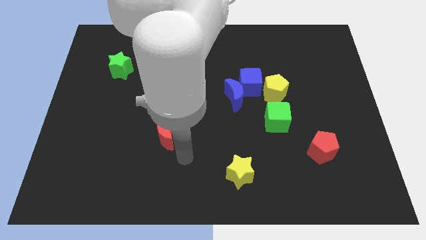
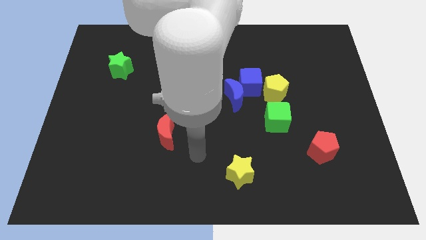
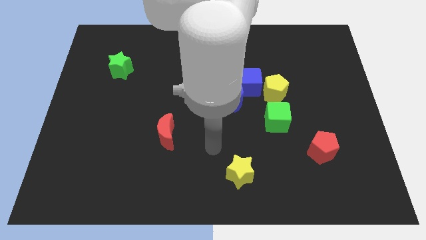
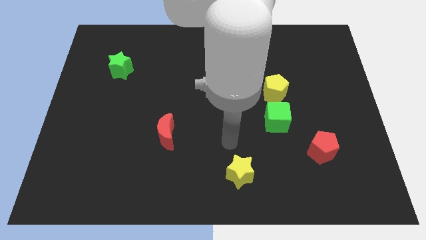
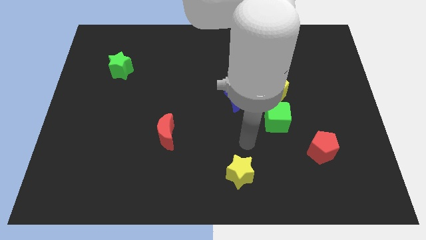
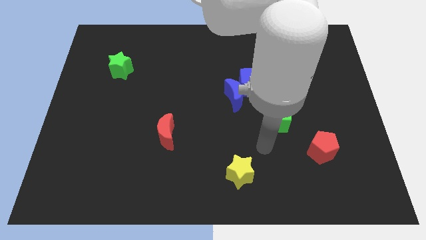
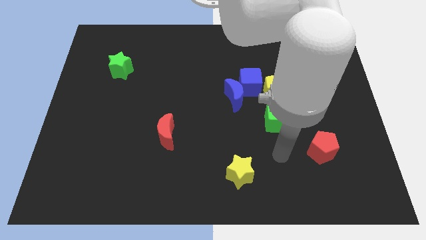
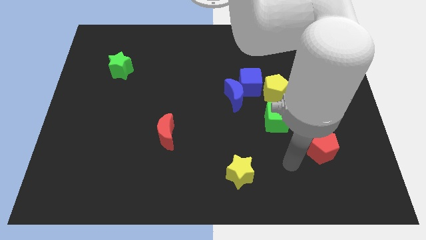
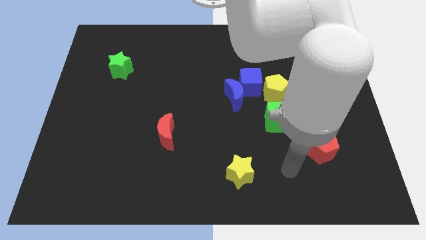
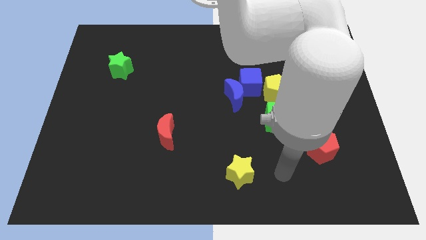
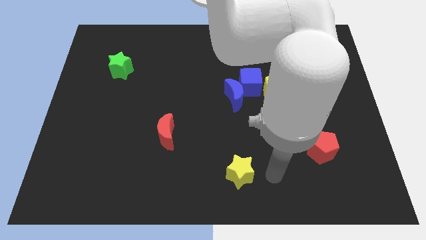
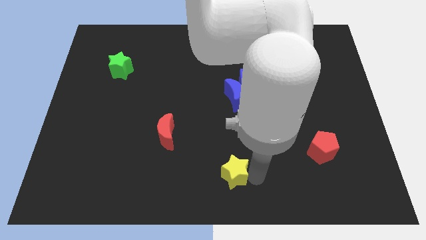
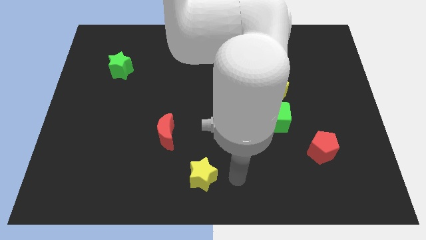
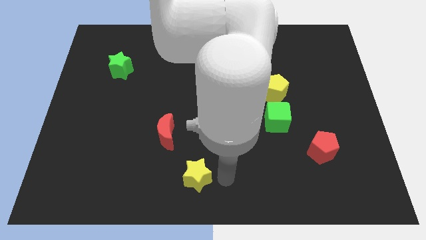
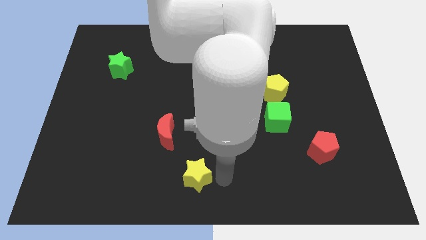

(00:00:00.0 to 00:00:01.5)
move the yellow star to bottom center

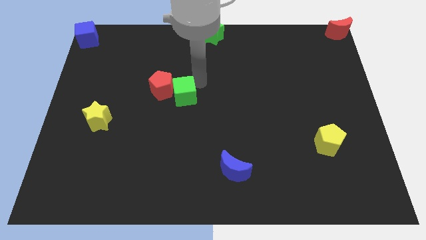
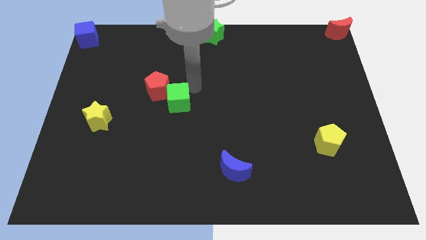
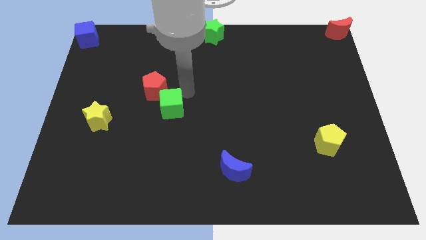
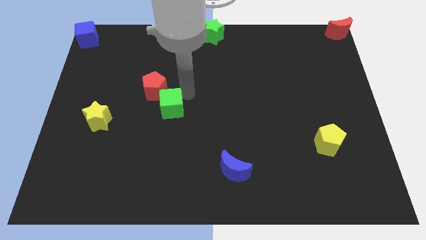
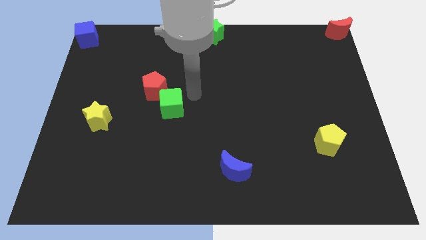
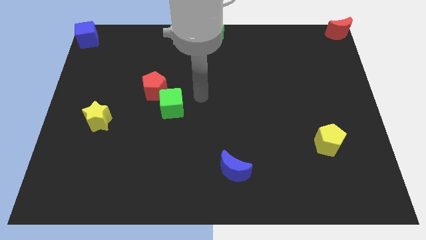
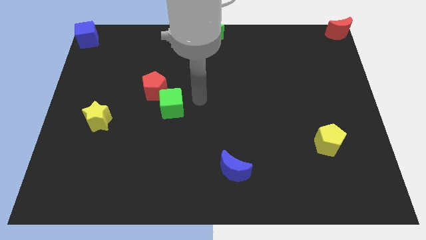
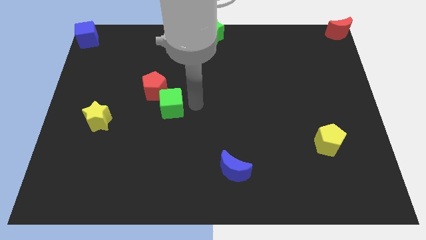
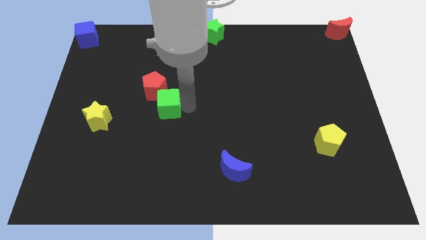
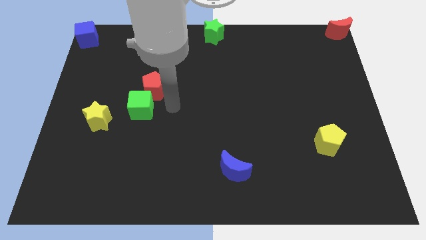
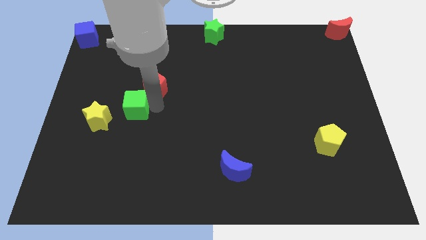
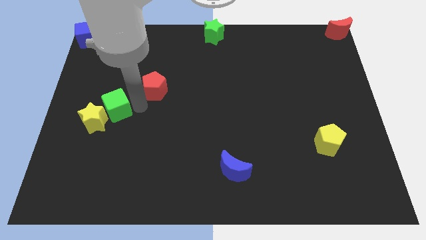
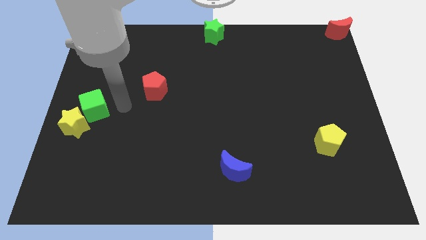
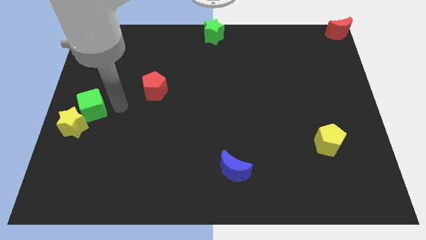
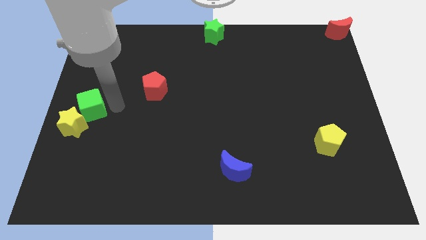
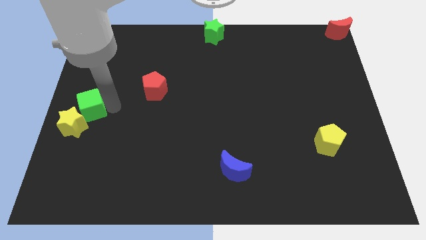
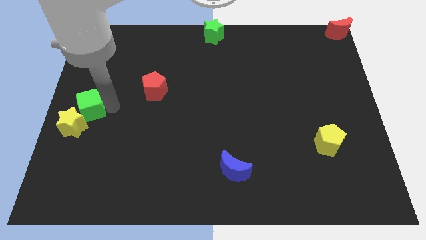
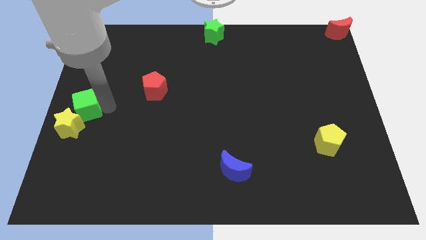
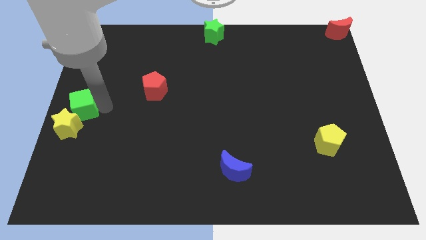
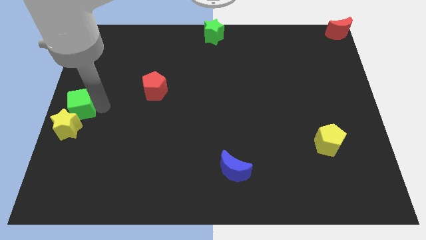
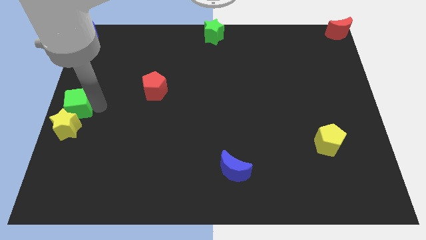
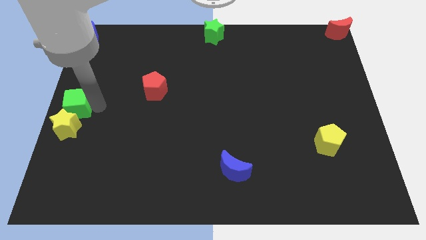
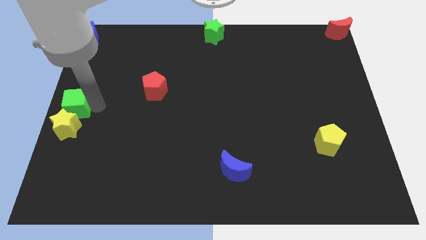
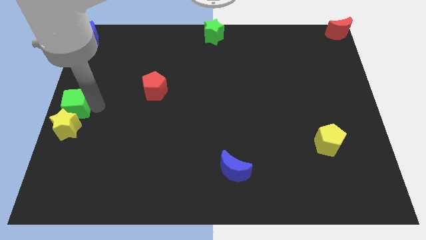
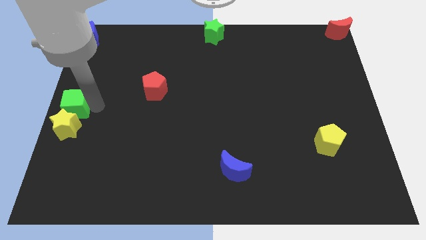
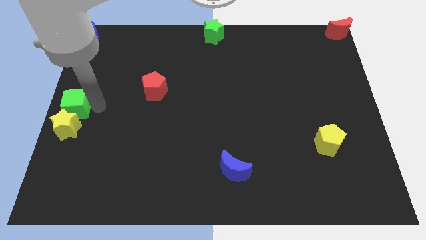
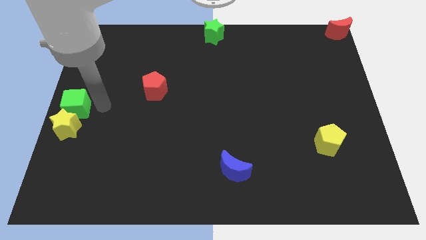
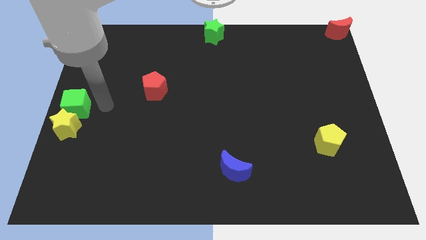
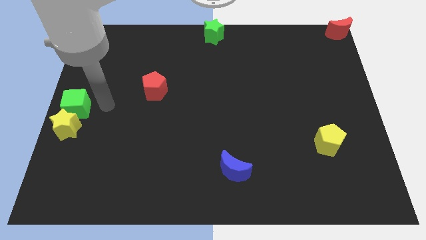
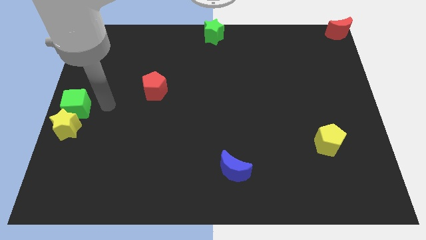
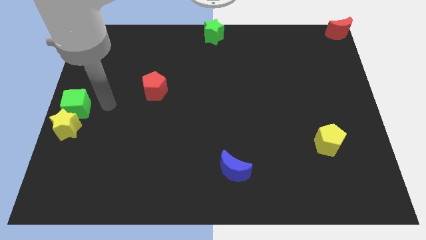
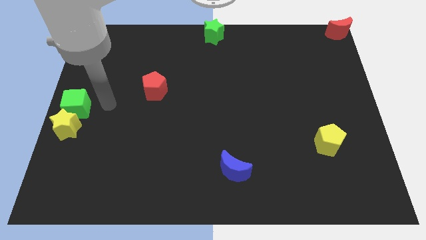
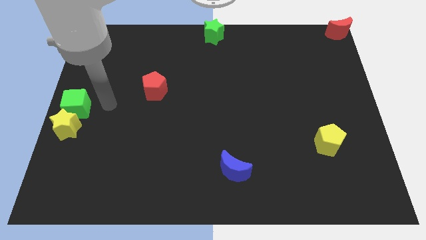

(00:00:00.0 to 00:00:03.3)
place green cube above yellow star

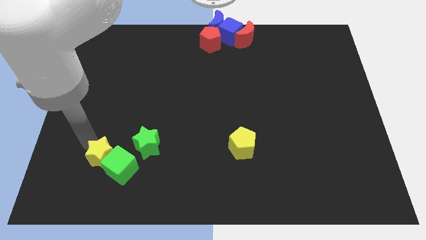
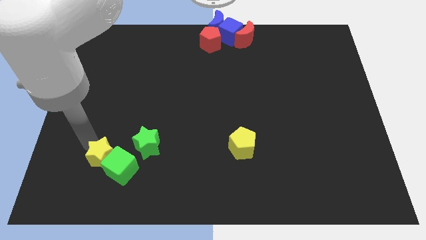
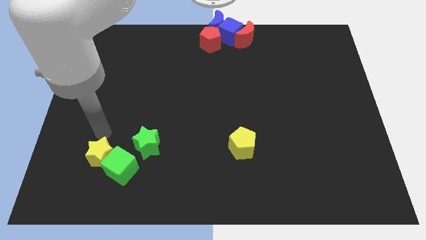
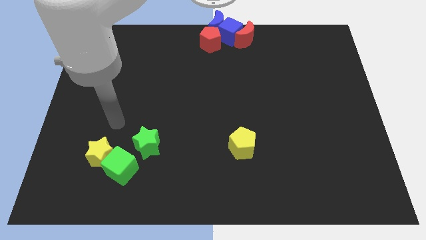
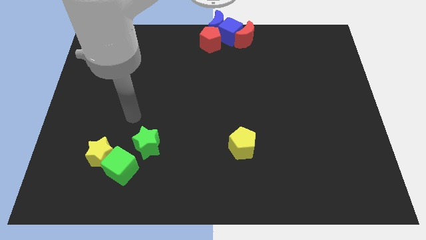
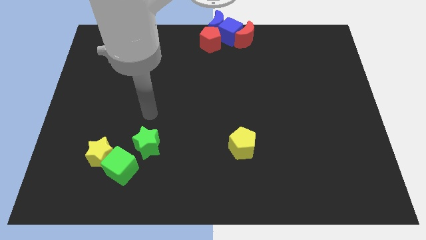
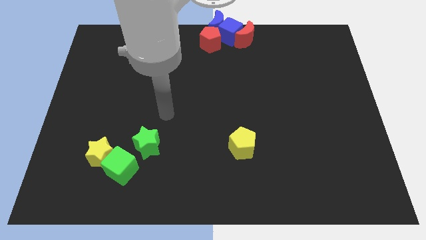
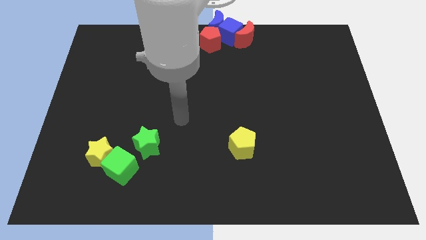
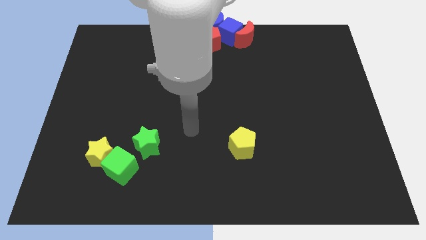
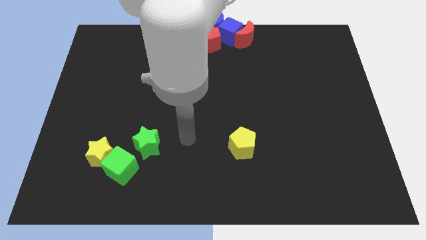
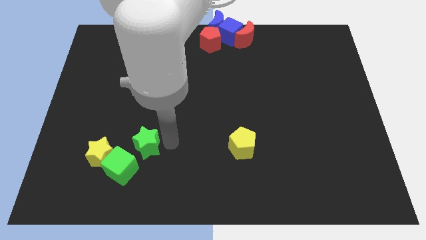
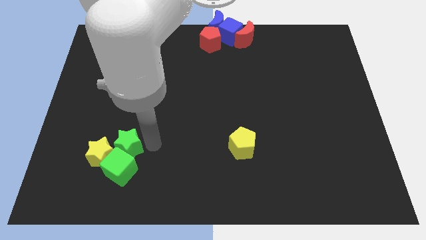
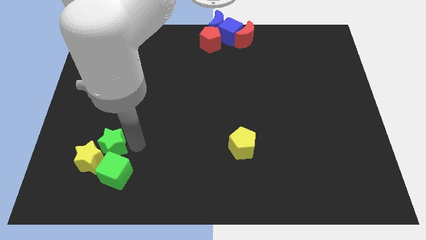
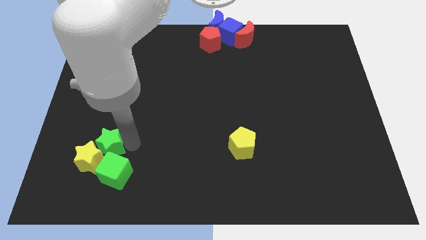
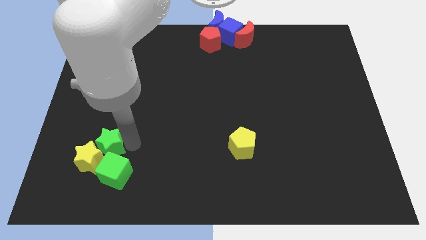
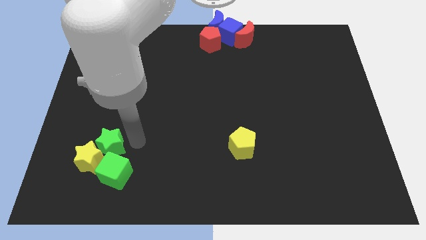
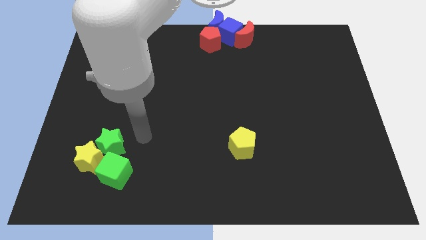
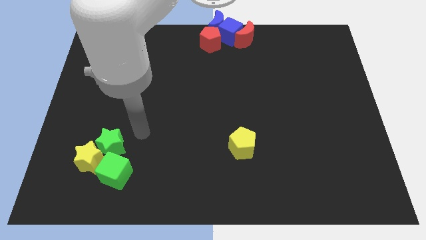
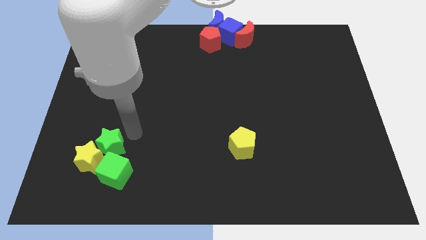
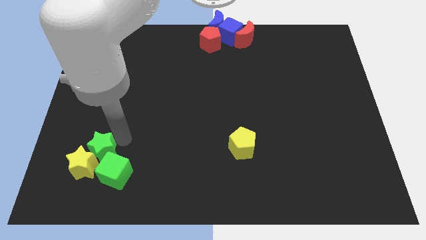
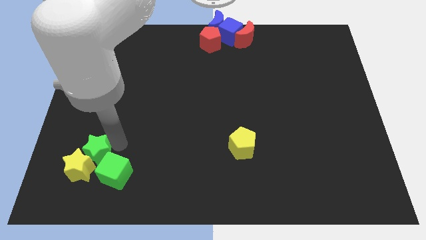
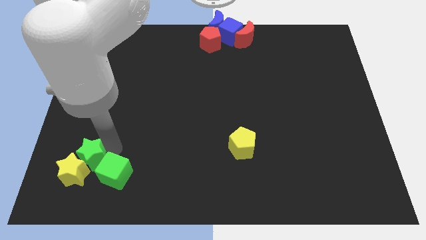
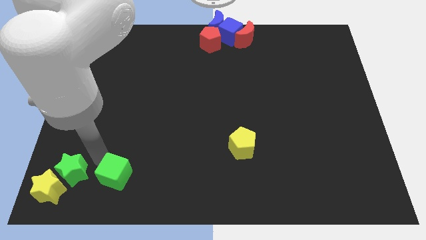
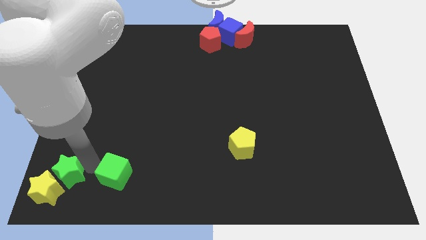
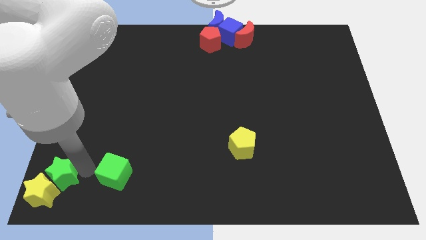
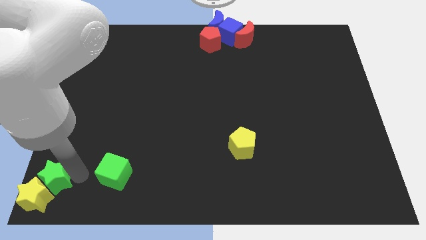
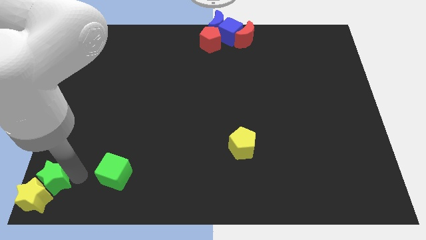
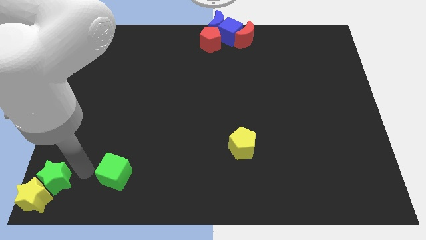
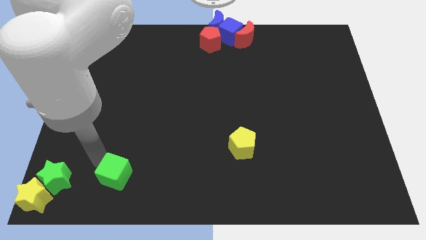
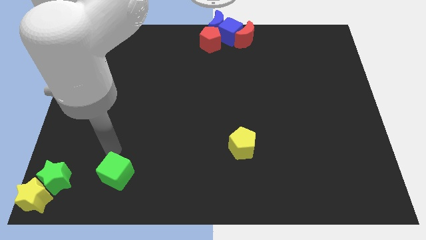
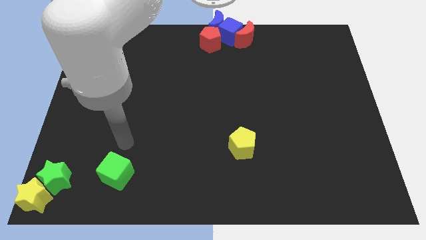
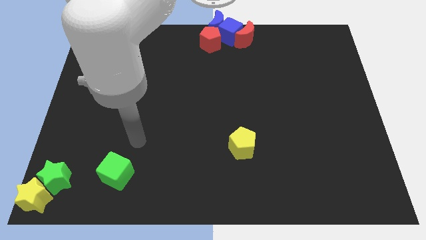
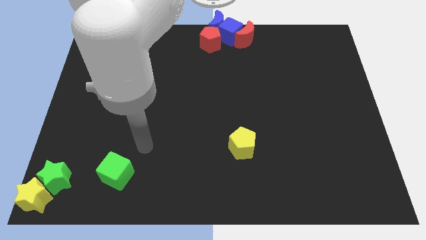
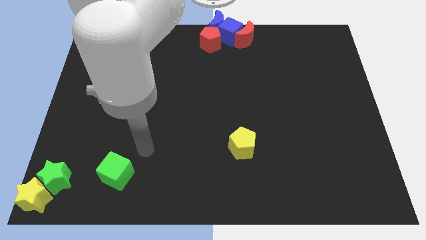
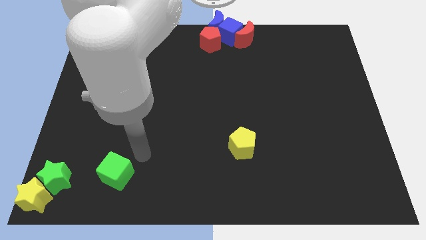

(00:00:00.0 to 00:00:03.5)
move the yellow star with the green star to the bottom left

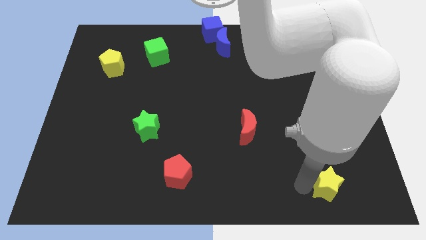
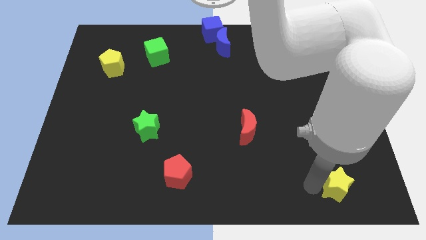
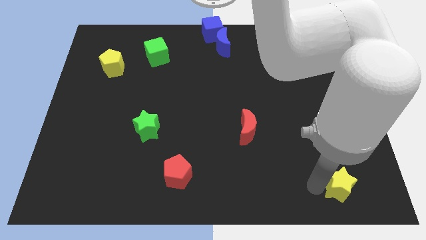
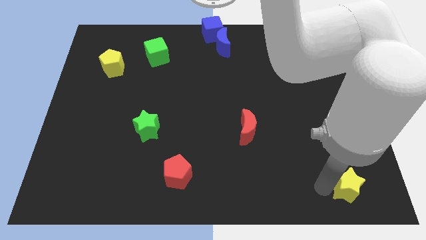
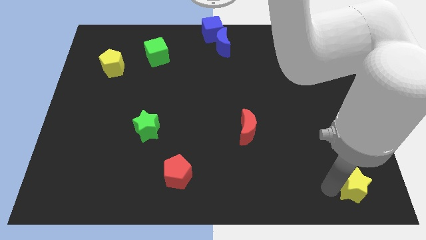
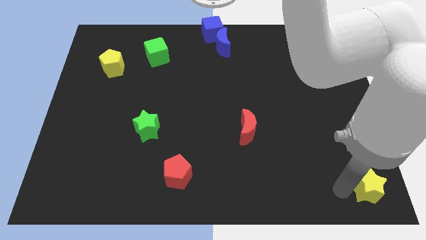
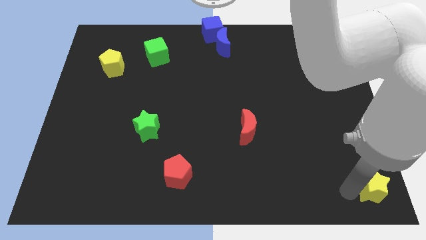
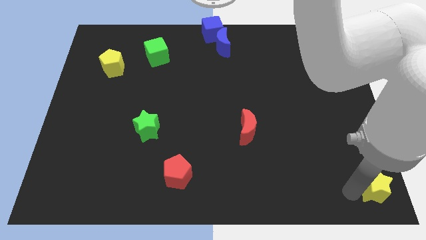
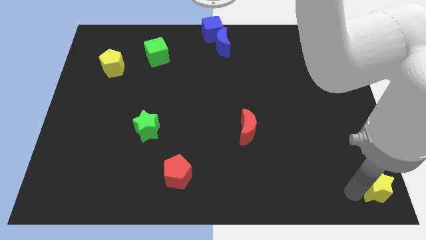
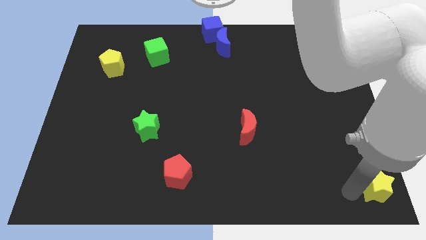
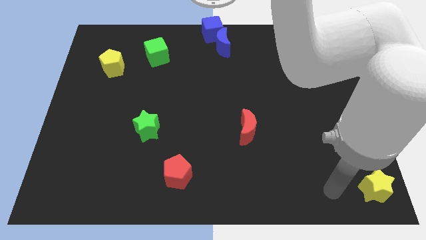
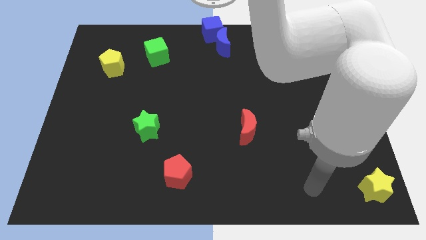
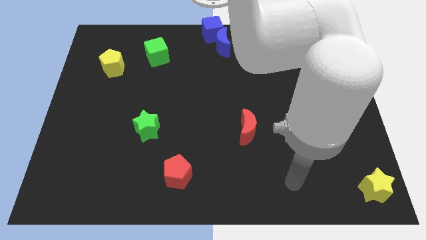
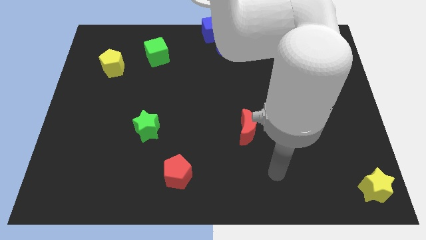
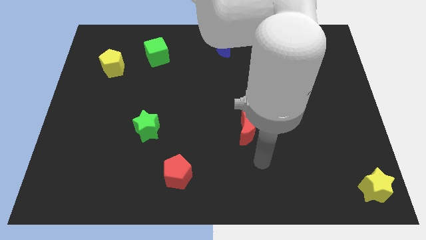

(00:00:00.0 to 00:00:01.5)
push the yellow star towards the bottom right side of the board
